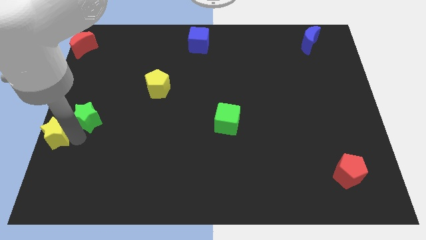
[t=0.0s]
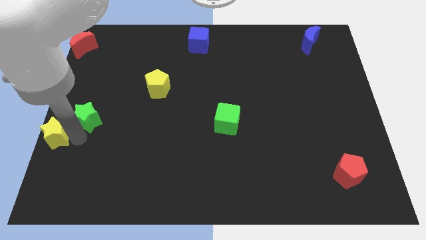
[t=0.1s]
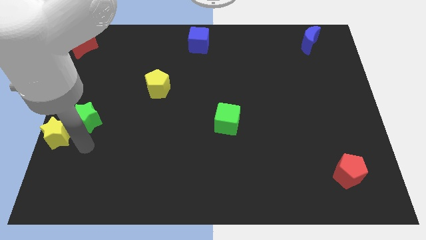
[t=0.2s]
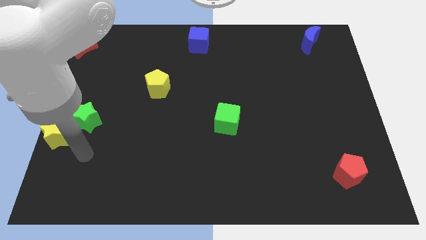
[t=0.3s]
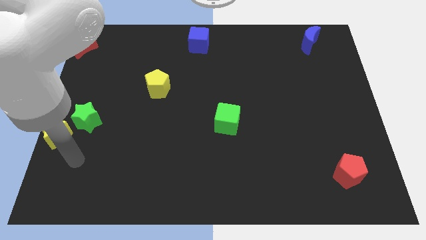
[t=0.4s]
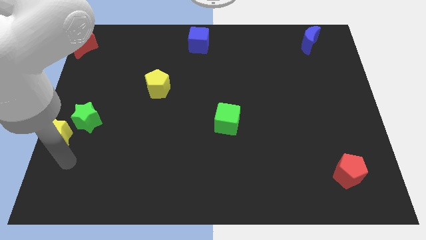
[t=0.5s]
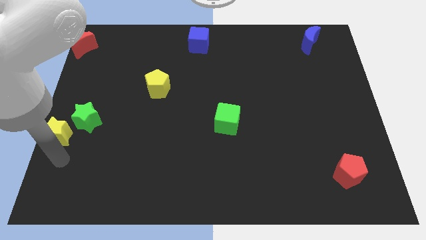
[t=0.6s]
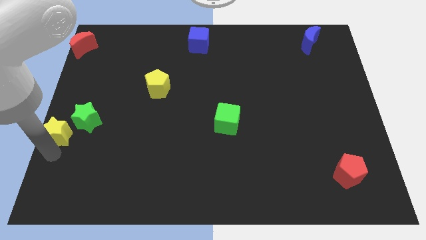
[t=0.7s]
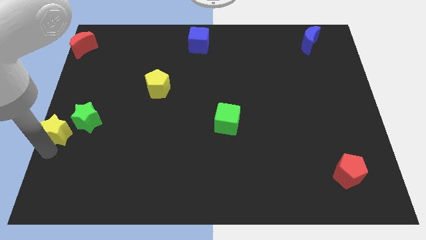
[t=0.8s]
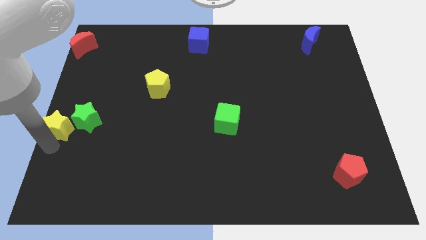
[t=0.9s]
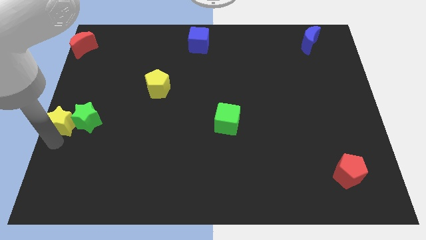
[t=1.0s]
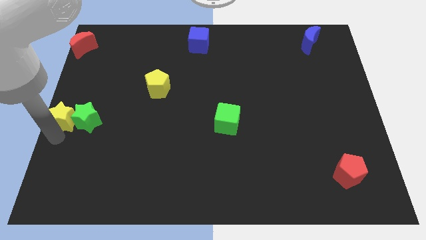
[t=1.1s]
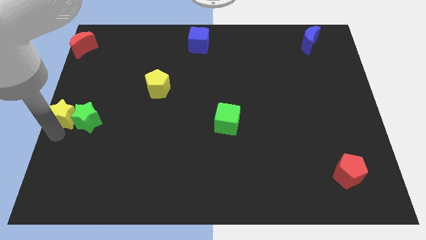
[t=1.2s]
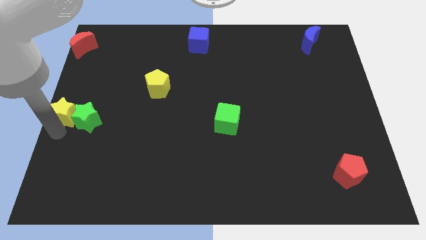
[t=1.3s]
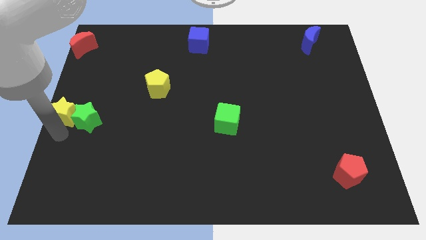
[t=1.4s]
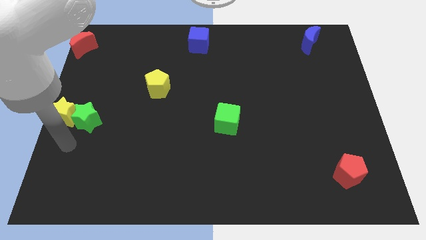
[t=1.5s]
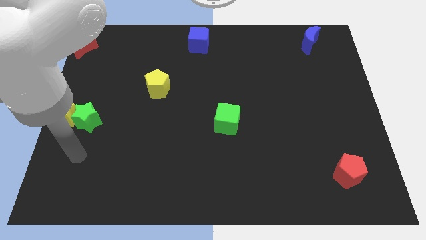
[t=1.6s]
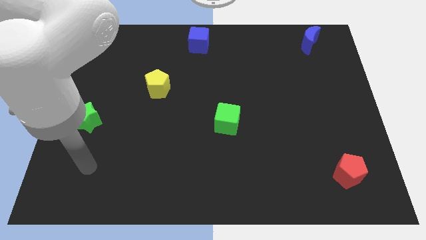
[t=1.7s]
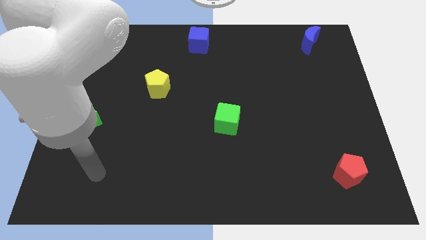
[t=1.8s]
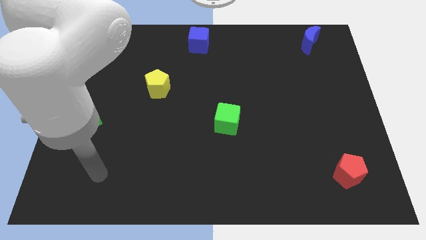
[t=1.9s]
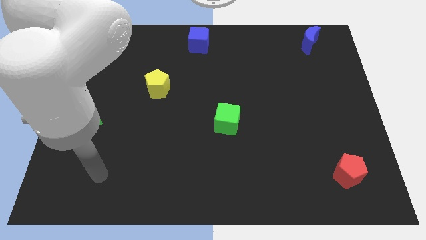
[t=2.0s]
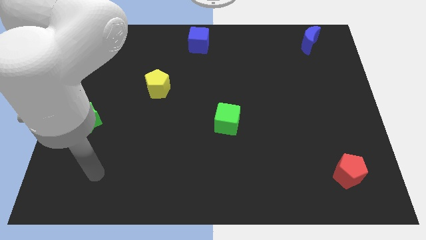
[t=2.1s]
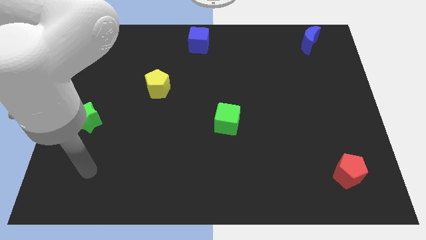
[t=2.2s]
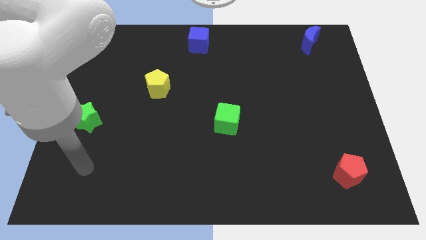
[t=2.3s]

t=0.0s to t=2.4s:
move the yellow star to the left of the green star

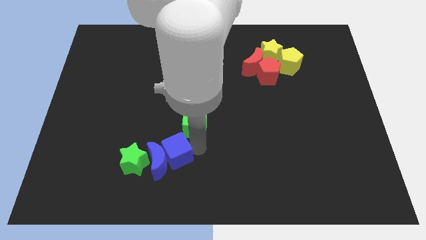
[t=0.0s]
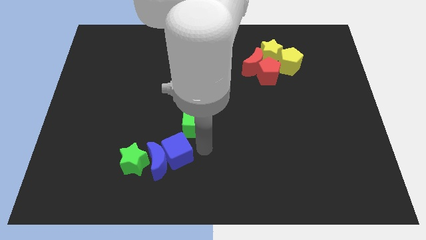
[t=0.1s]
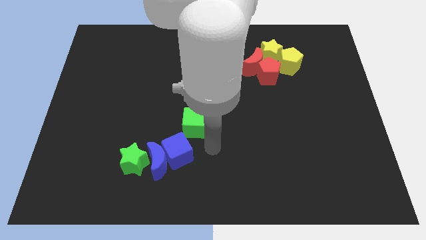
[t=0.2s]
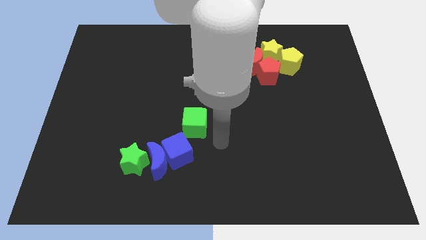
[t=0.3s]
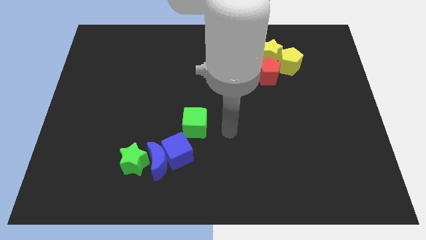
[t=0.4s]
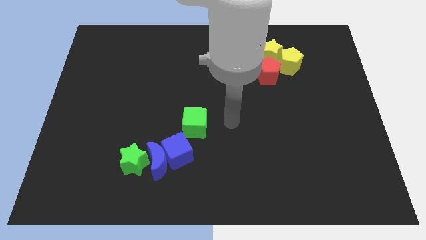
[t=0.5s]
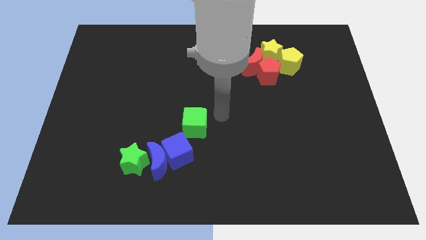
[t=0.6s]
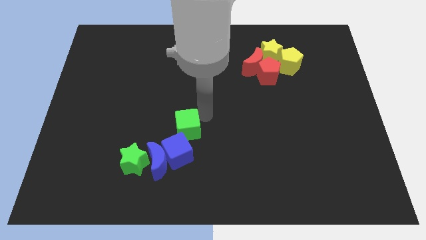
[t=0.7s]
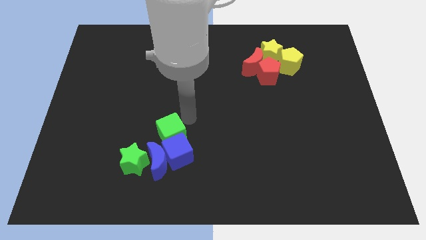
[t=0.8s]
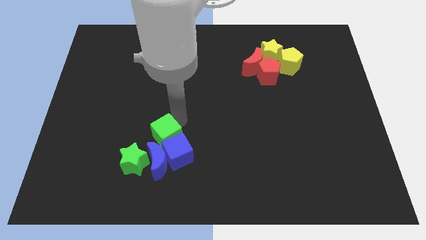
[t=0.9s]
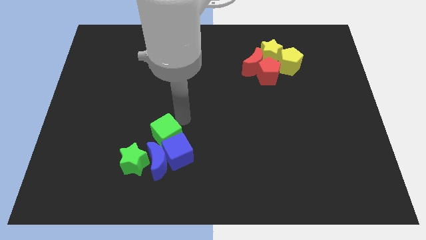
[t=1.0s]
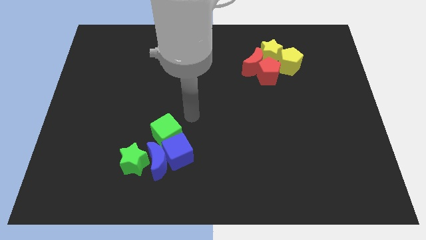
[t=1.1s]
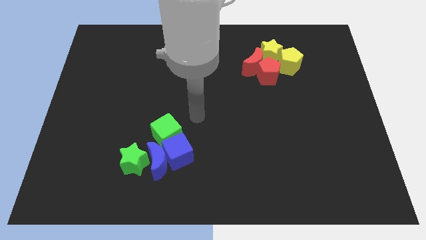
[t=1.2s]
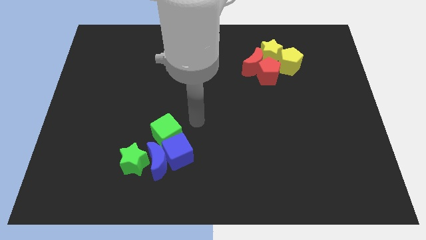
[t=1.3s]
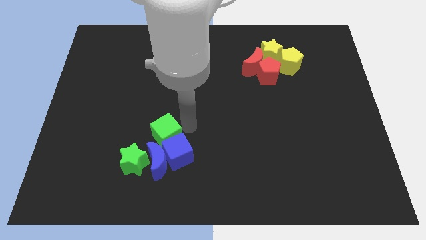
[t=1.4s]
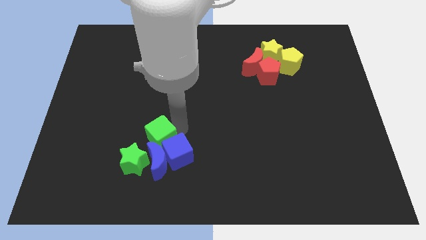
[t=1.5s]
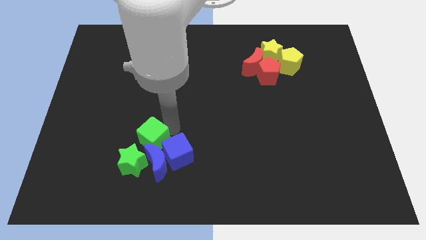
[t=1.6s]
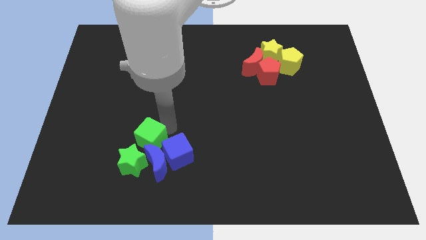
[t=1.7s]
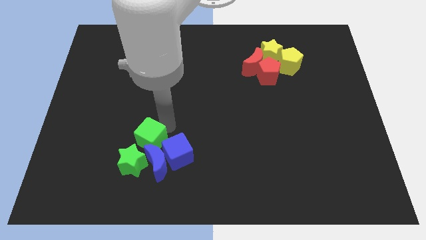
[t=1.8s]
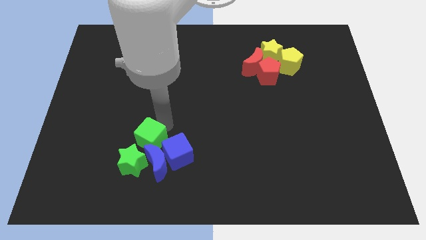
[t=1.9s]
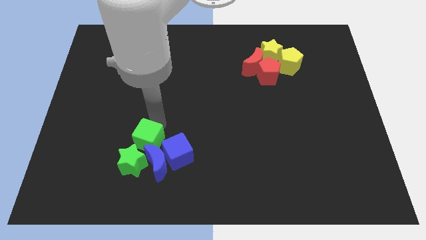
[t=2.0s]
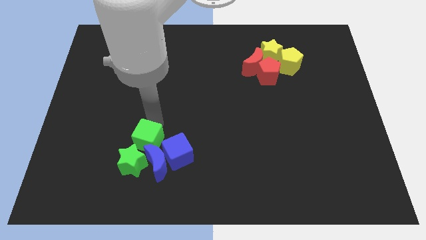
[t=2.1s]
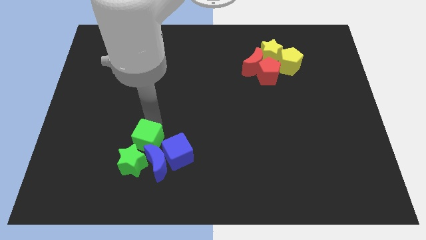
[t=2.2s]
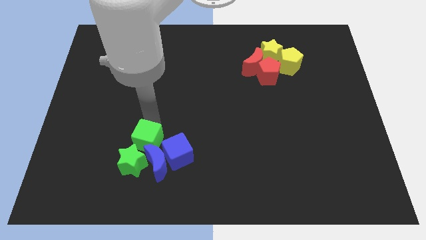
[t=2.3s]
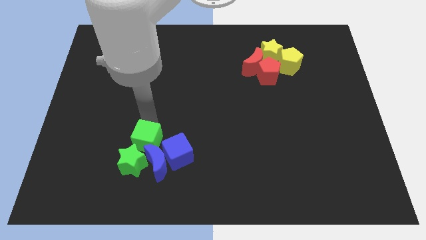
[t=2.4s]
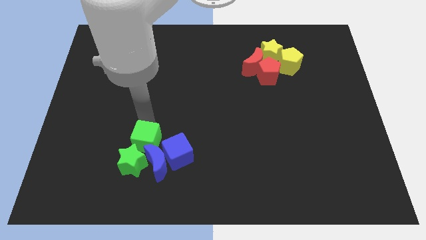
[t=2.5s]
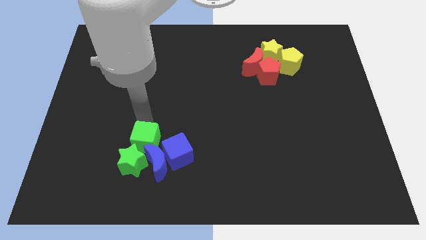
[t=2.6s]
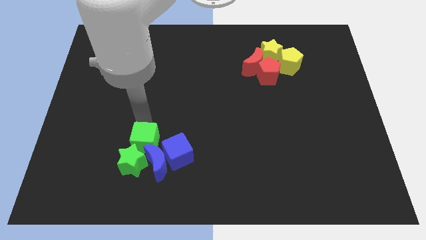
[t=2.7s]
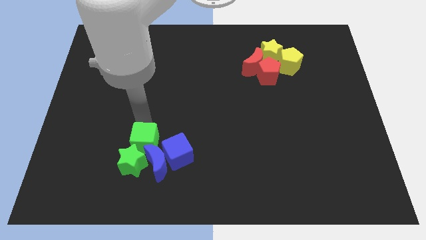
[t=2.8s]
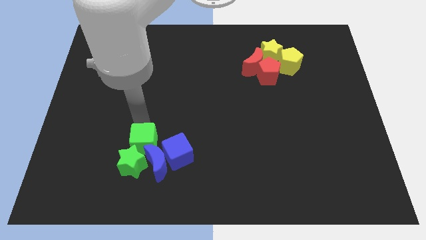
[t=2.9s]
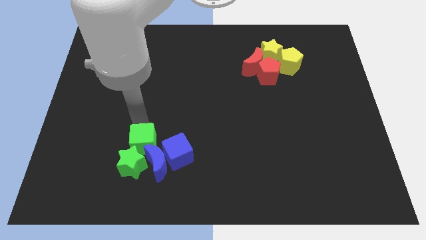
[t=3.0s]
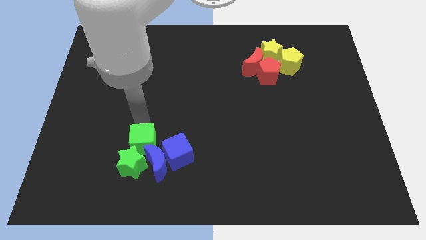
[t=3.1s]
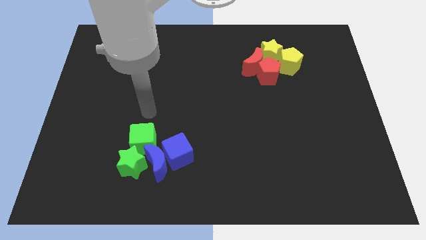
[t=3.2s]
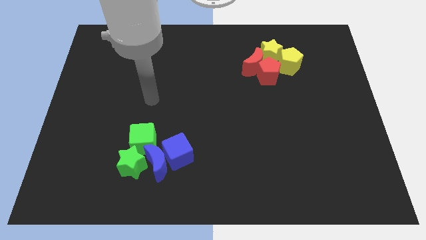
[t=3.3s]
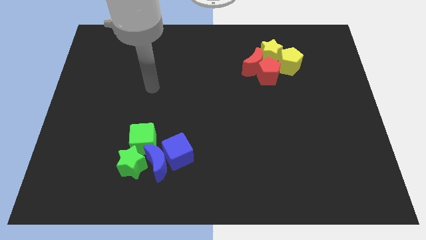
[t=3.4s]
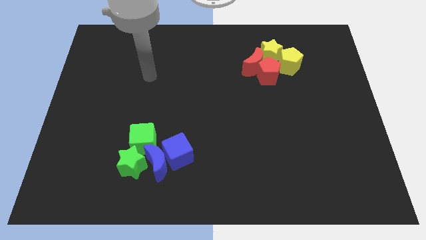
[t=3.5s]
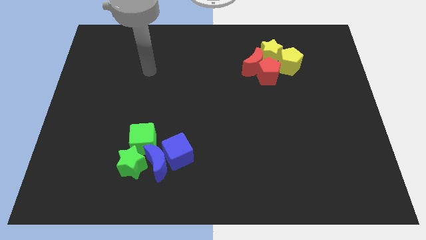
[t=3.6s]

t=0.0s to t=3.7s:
move the green cube above to the green star

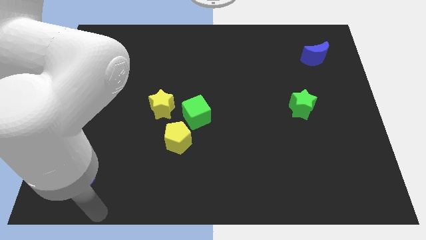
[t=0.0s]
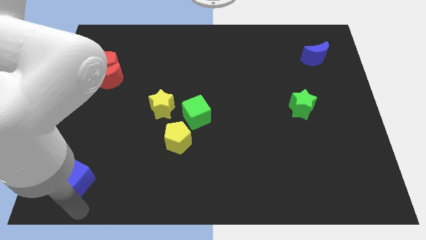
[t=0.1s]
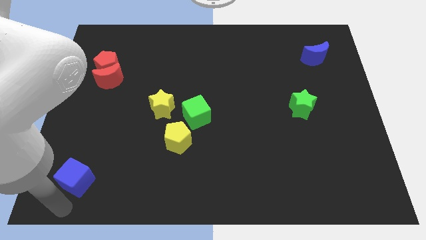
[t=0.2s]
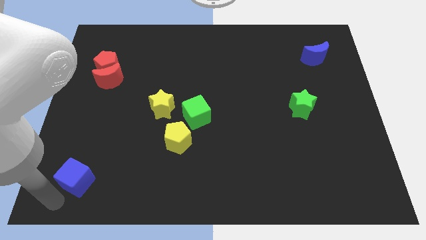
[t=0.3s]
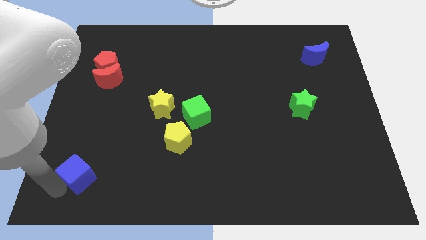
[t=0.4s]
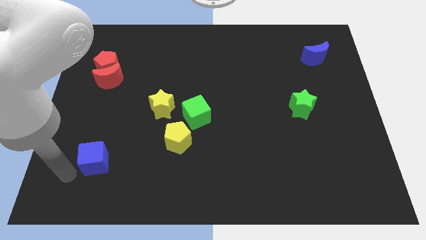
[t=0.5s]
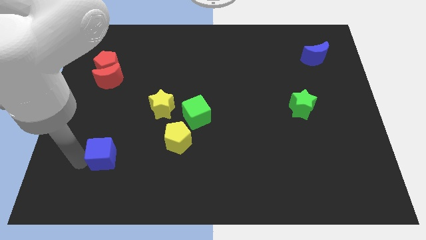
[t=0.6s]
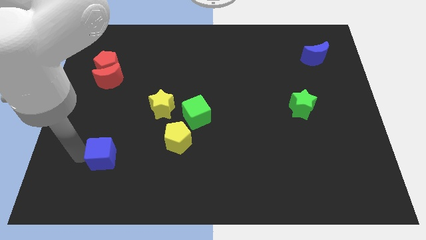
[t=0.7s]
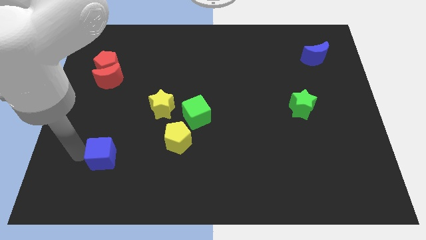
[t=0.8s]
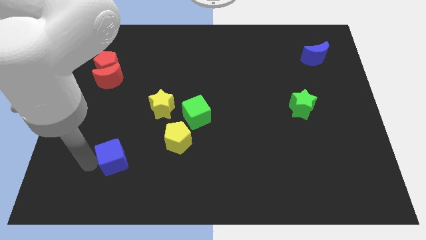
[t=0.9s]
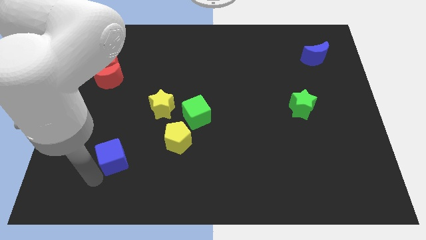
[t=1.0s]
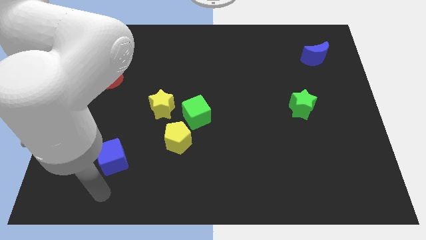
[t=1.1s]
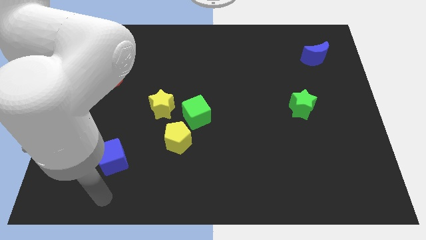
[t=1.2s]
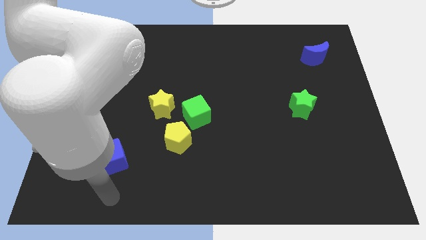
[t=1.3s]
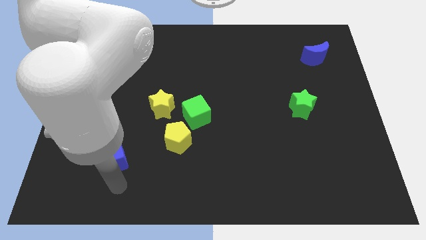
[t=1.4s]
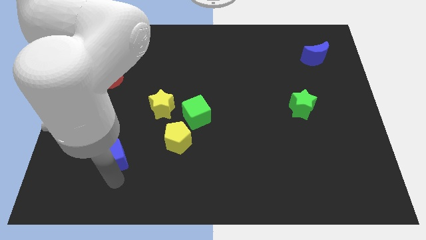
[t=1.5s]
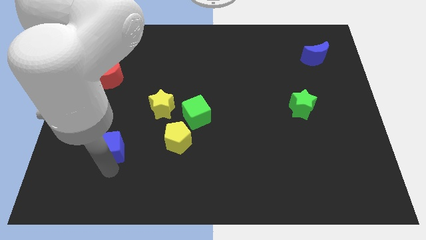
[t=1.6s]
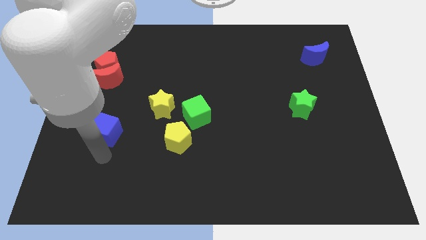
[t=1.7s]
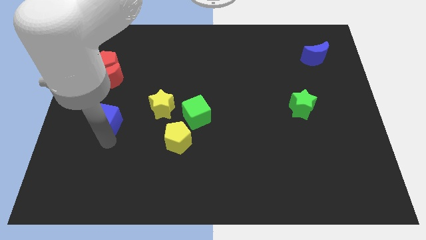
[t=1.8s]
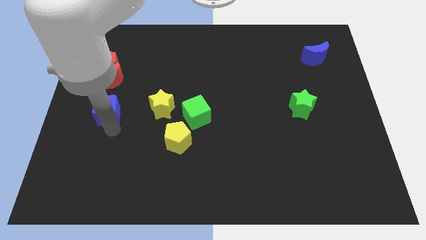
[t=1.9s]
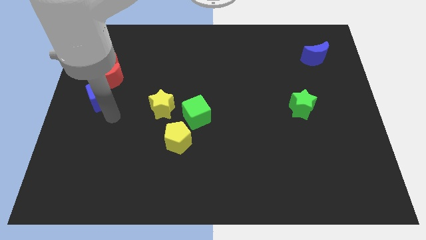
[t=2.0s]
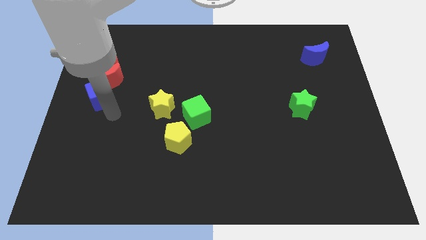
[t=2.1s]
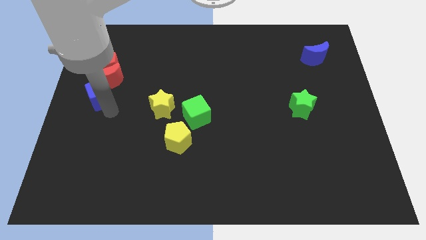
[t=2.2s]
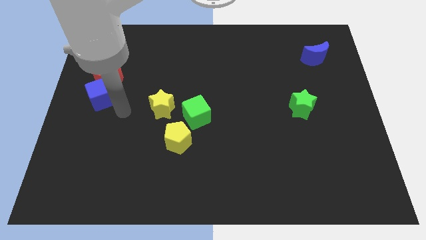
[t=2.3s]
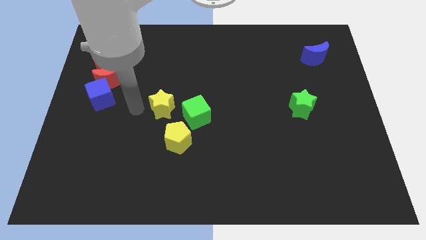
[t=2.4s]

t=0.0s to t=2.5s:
push the blue cube to the bottom side of the red moon

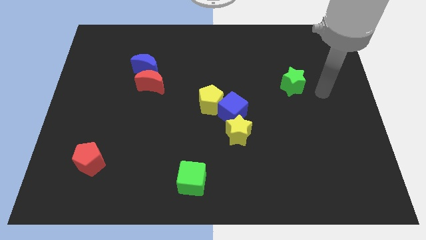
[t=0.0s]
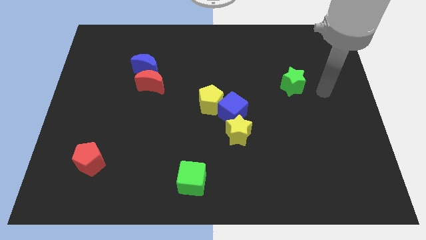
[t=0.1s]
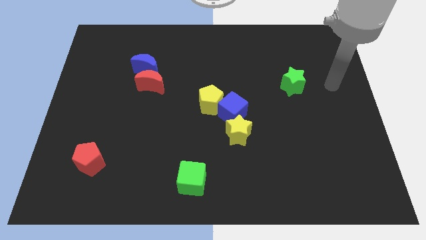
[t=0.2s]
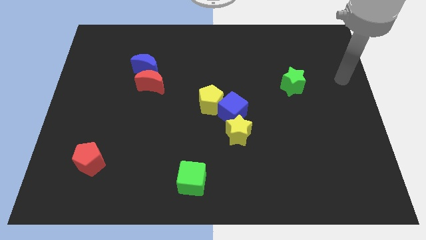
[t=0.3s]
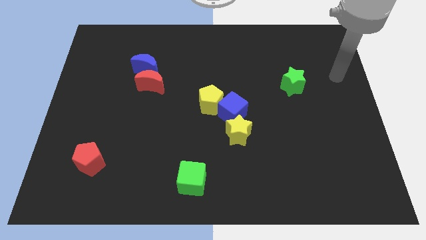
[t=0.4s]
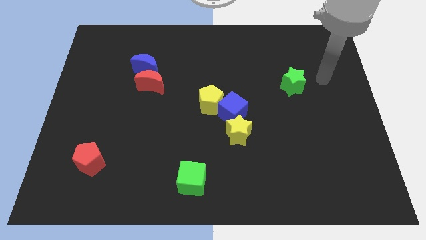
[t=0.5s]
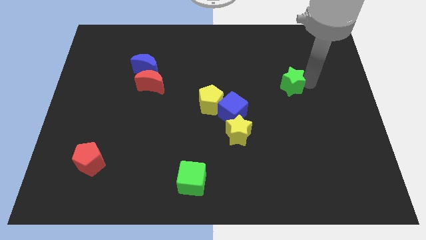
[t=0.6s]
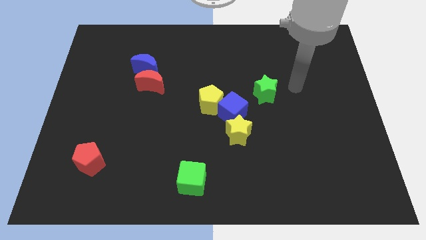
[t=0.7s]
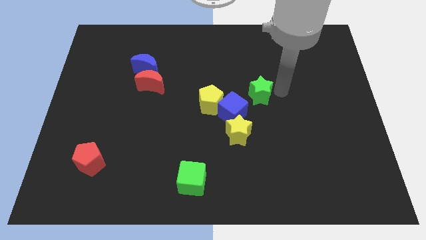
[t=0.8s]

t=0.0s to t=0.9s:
move green star right above the blue cube
